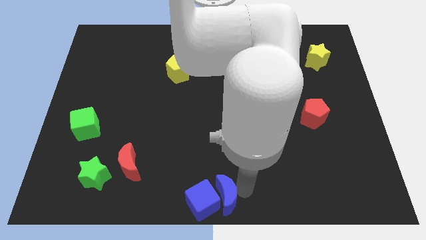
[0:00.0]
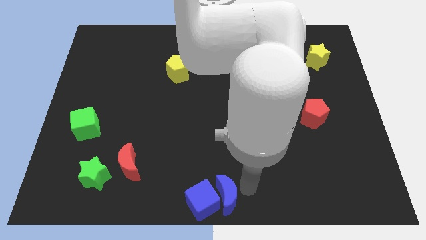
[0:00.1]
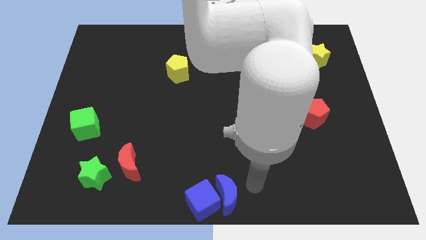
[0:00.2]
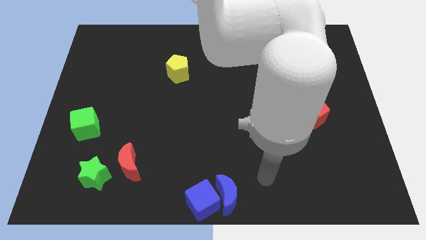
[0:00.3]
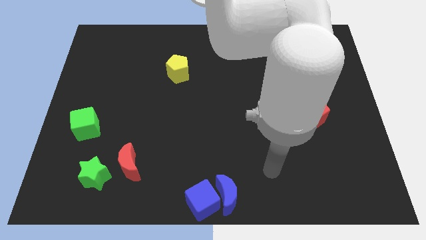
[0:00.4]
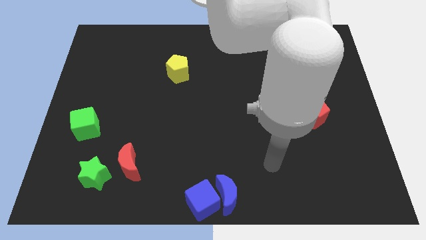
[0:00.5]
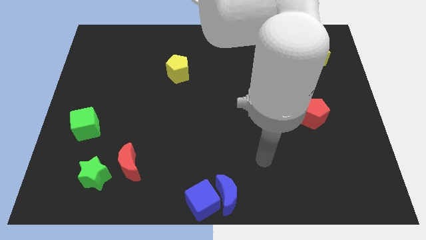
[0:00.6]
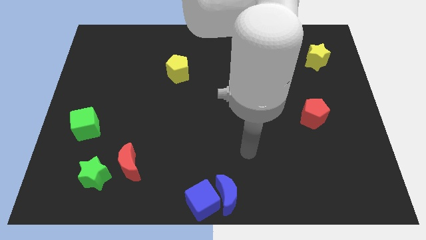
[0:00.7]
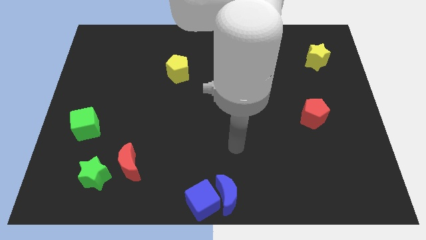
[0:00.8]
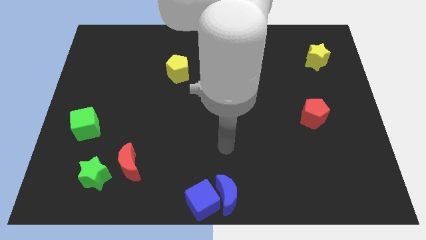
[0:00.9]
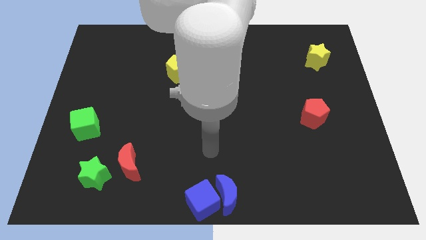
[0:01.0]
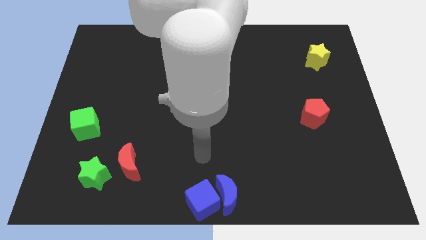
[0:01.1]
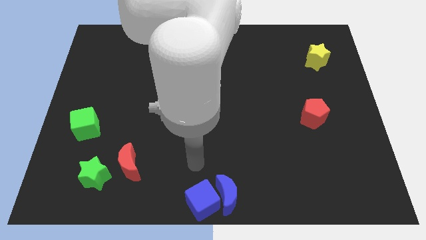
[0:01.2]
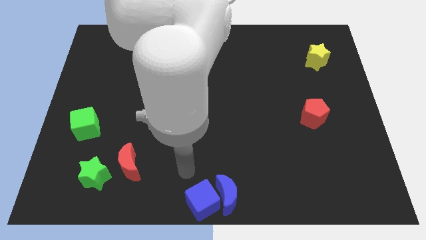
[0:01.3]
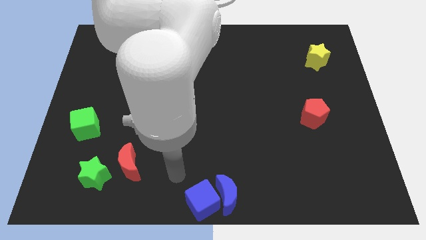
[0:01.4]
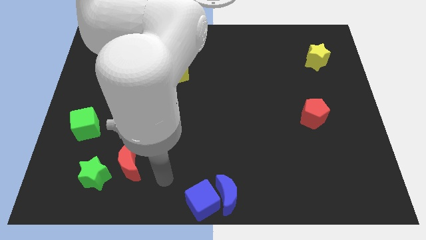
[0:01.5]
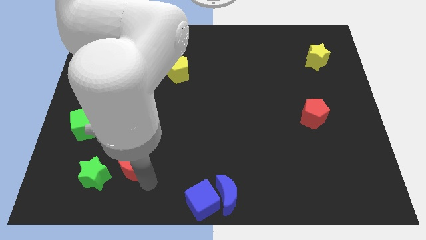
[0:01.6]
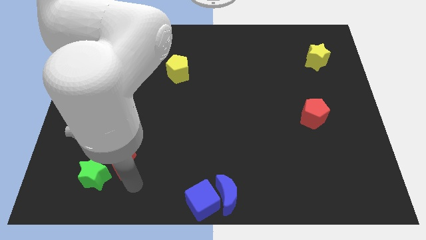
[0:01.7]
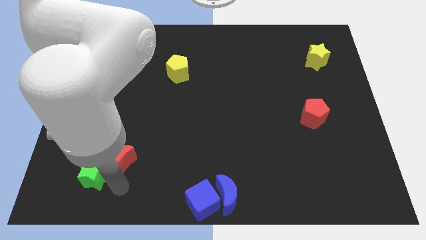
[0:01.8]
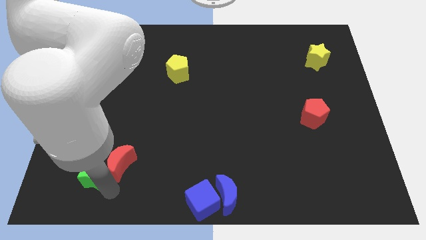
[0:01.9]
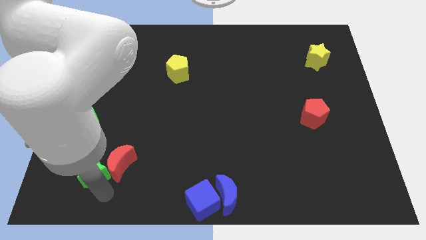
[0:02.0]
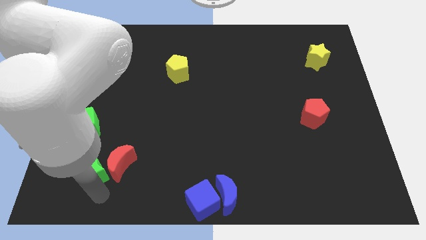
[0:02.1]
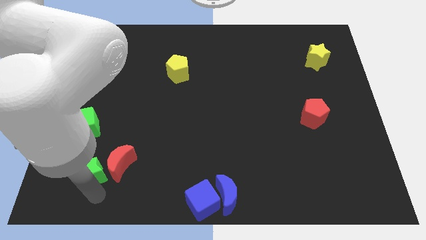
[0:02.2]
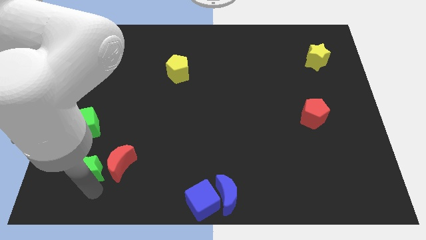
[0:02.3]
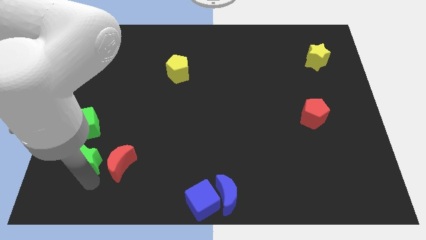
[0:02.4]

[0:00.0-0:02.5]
place the arm below the green star at bottom left corner

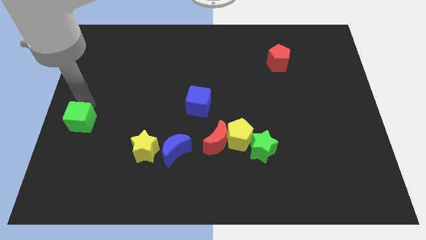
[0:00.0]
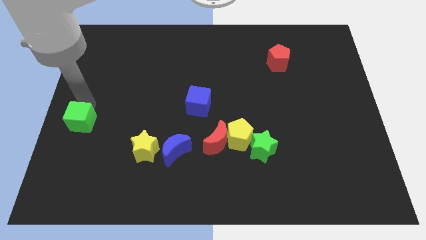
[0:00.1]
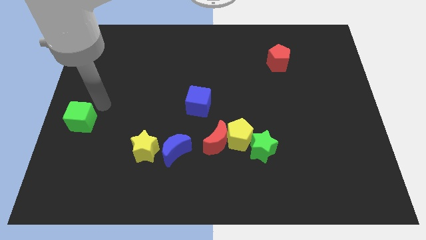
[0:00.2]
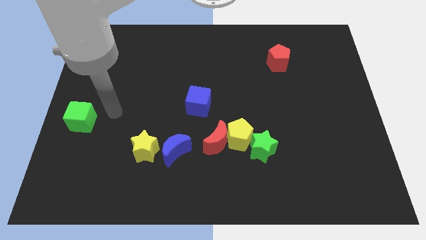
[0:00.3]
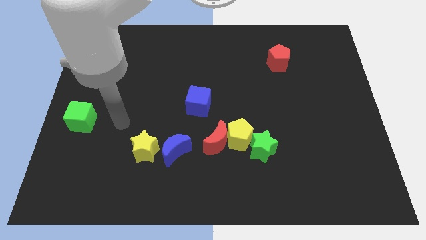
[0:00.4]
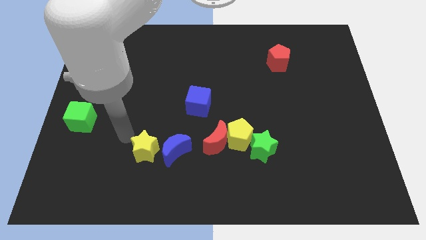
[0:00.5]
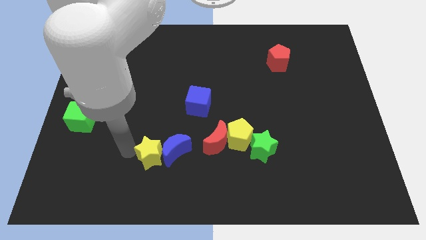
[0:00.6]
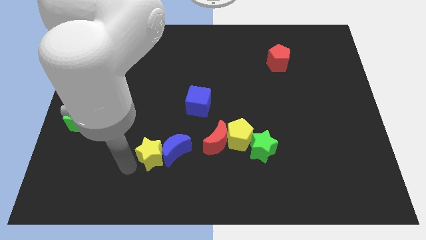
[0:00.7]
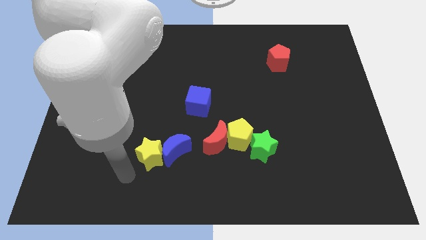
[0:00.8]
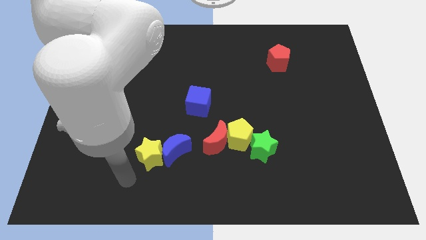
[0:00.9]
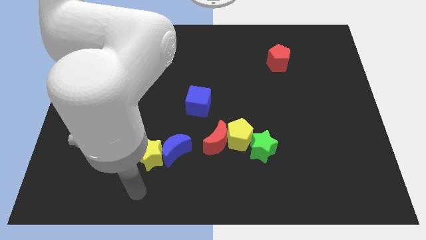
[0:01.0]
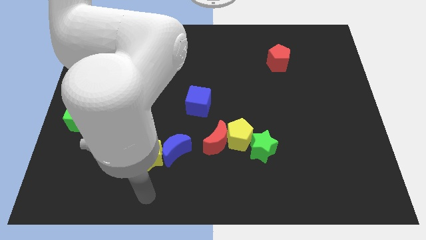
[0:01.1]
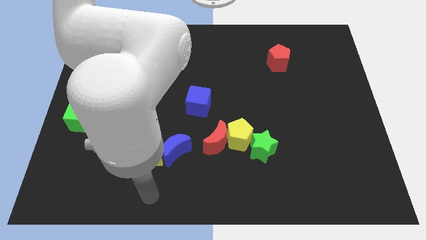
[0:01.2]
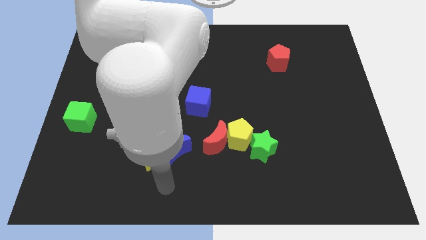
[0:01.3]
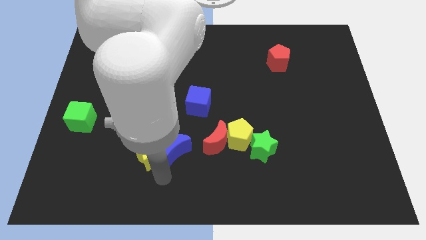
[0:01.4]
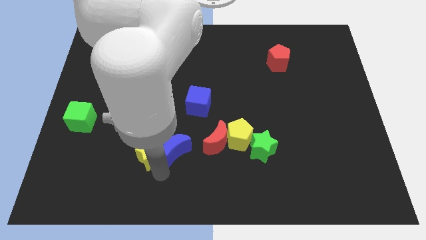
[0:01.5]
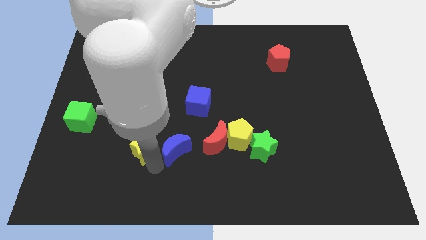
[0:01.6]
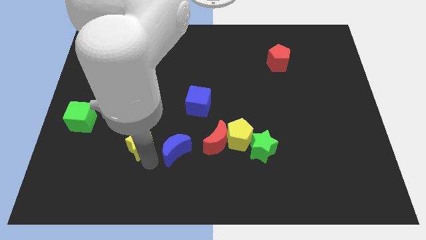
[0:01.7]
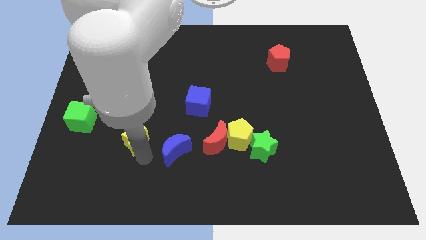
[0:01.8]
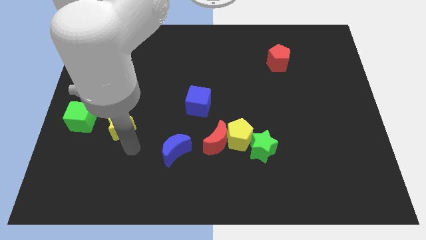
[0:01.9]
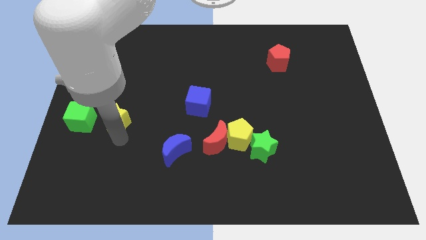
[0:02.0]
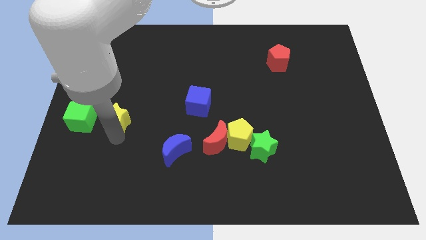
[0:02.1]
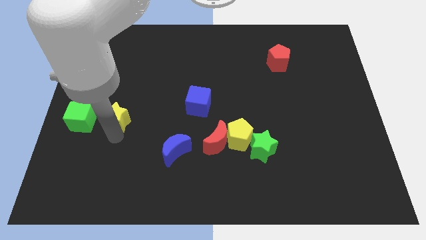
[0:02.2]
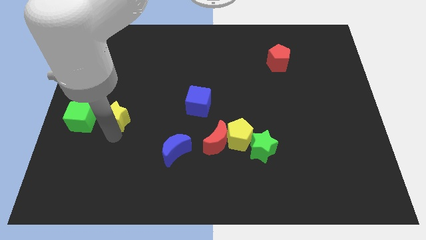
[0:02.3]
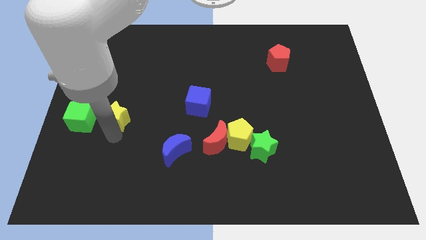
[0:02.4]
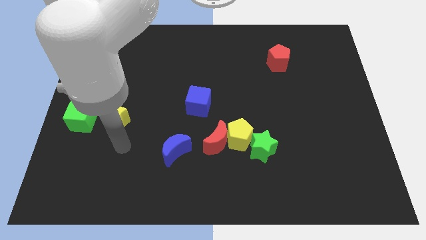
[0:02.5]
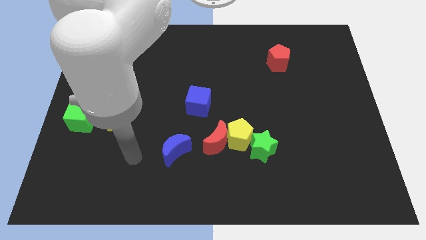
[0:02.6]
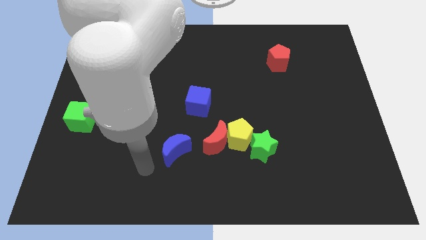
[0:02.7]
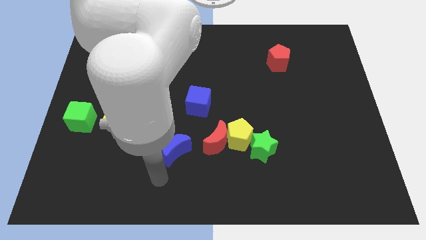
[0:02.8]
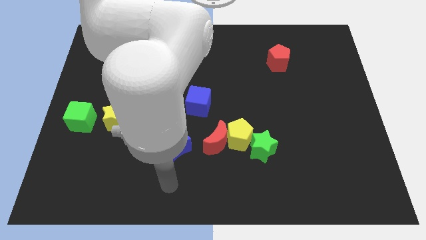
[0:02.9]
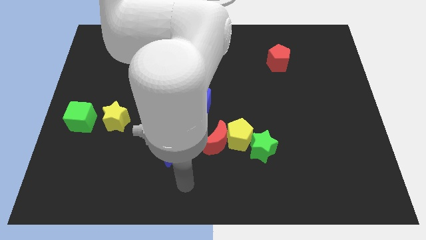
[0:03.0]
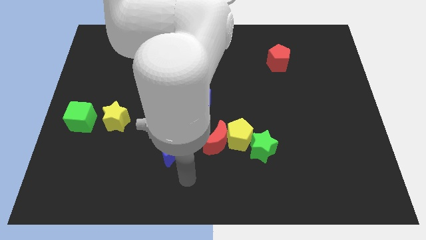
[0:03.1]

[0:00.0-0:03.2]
place the yellow star right to the green cube

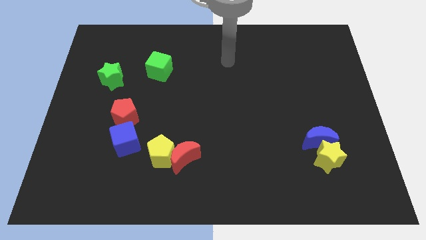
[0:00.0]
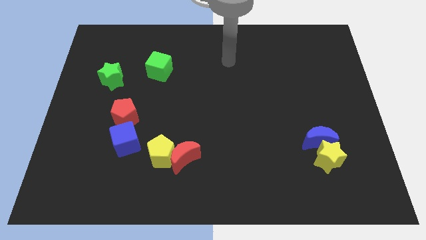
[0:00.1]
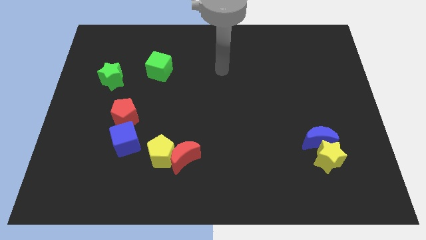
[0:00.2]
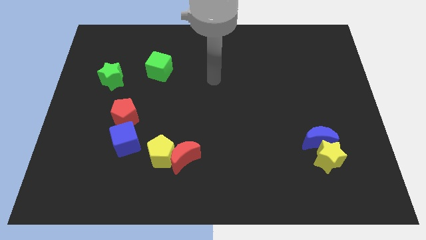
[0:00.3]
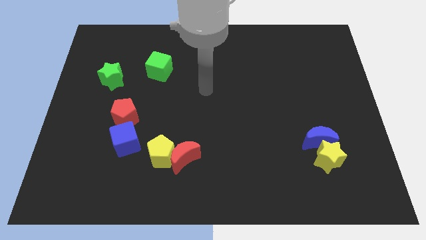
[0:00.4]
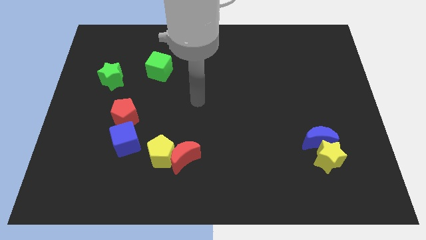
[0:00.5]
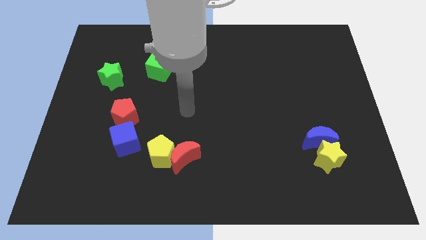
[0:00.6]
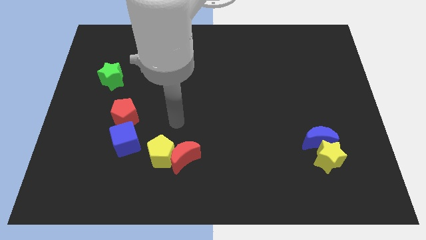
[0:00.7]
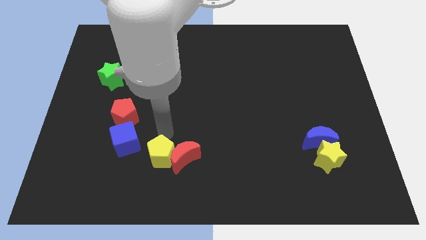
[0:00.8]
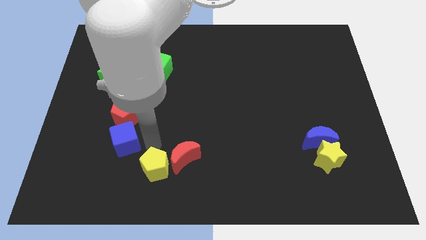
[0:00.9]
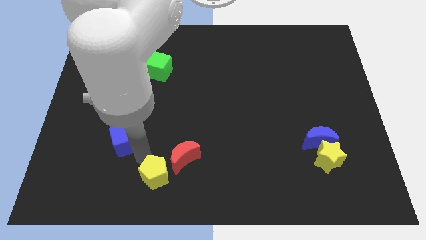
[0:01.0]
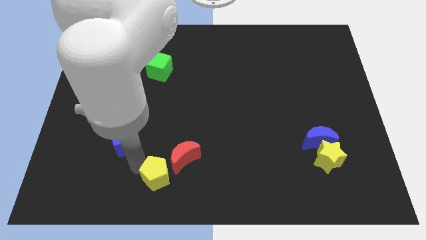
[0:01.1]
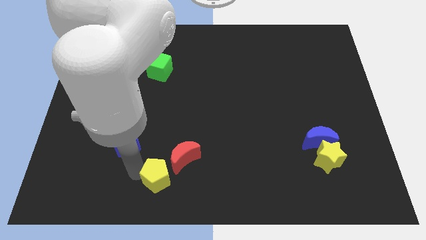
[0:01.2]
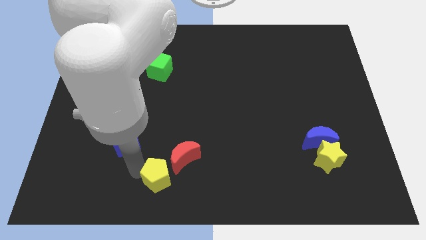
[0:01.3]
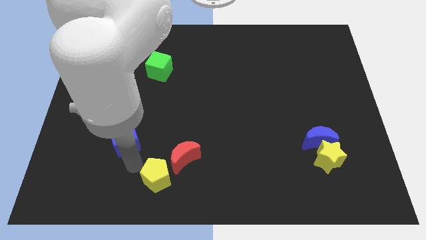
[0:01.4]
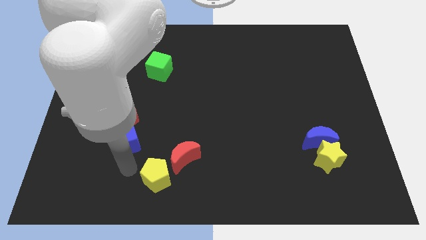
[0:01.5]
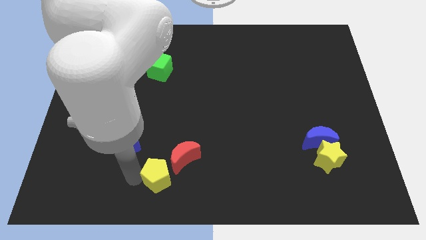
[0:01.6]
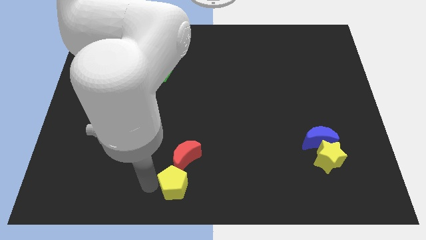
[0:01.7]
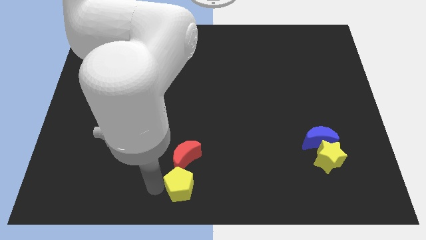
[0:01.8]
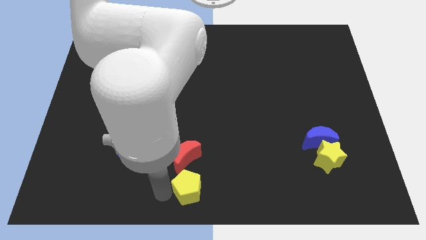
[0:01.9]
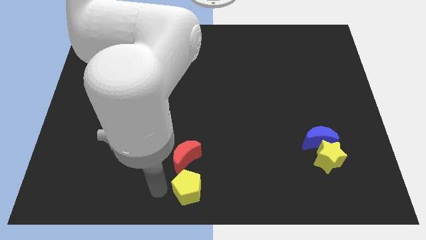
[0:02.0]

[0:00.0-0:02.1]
place yellow pentagon down to the red crescent

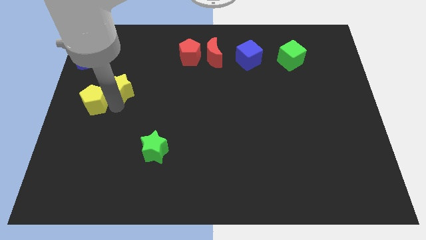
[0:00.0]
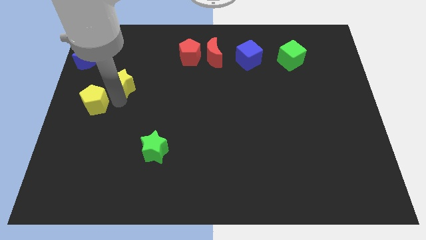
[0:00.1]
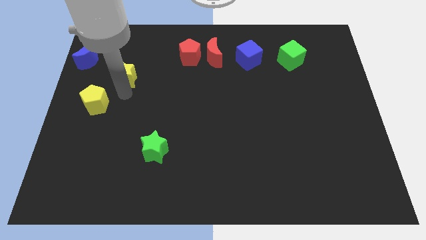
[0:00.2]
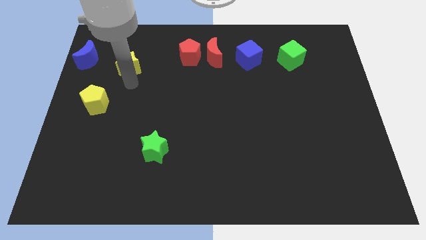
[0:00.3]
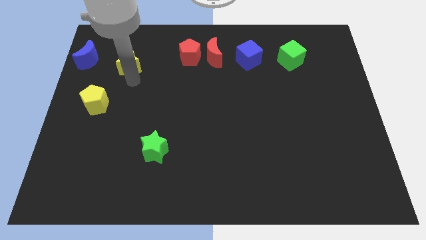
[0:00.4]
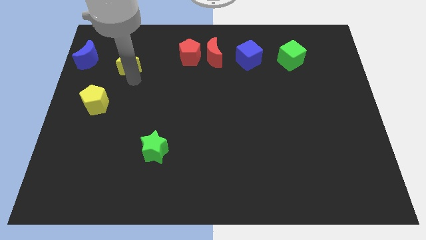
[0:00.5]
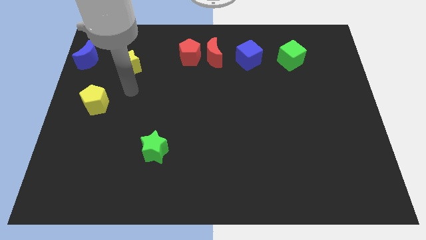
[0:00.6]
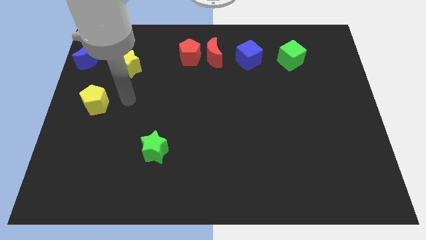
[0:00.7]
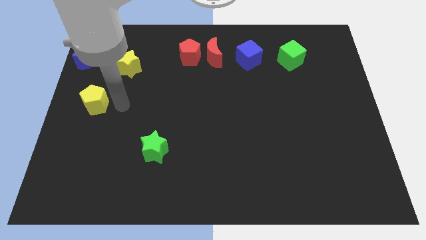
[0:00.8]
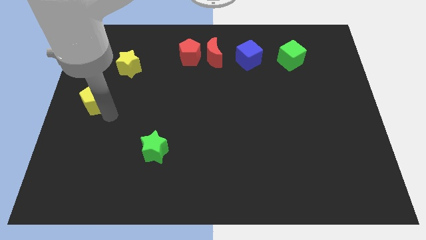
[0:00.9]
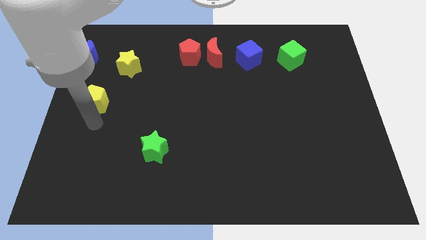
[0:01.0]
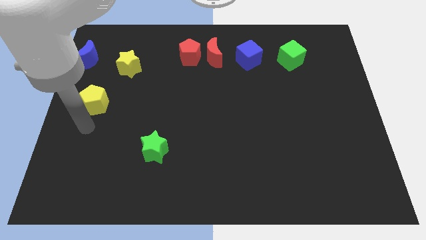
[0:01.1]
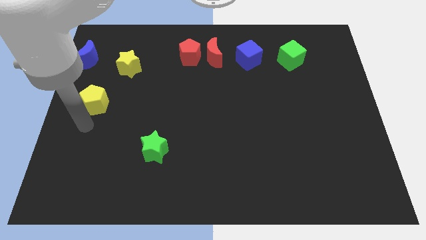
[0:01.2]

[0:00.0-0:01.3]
place the yellow star to the right of blue moon
